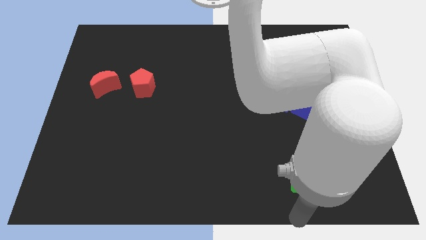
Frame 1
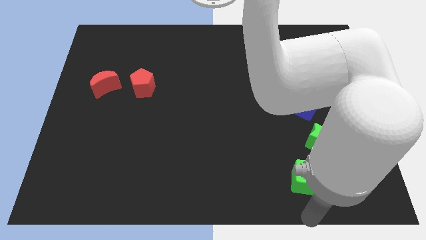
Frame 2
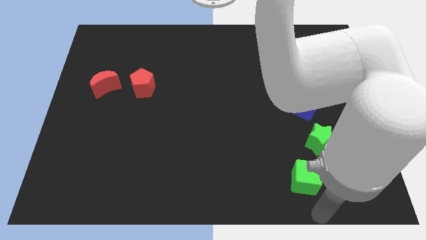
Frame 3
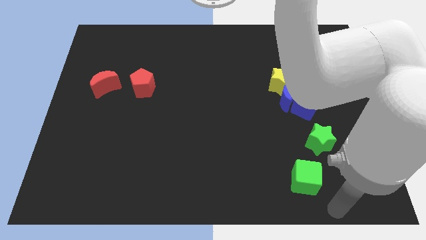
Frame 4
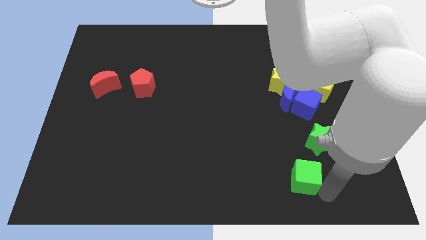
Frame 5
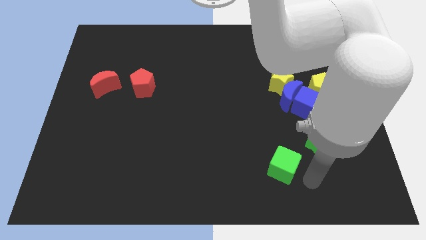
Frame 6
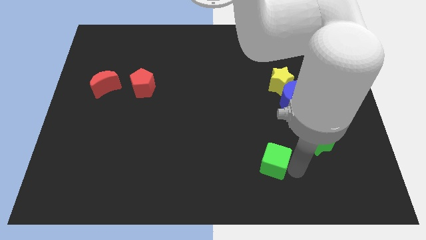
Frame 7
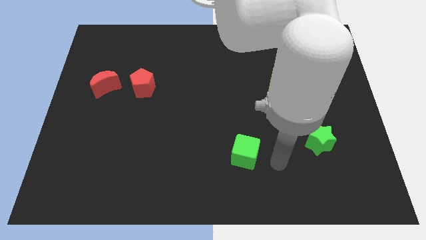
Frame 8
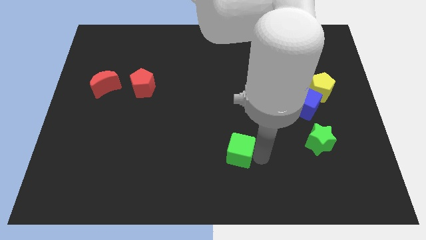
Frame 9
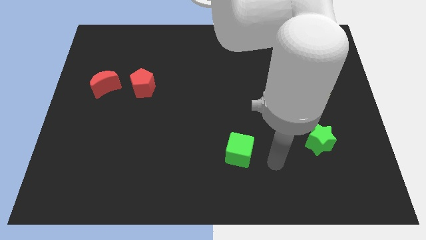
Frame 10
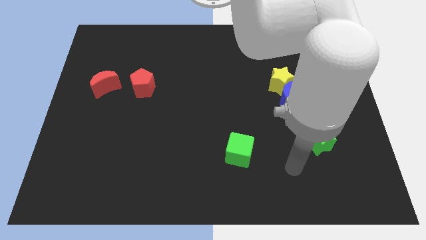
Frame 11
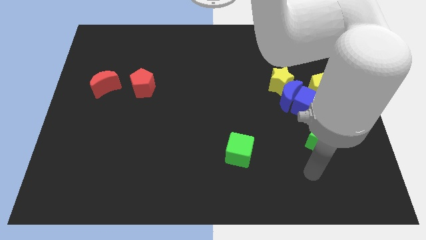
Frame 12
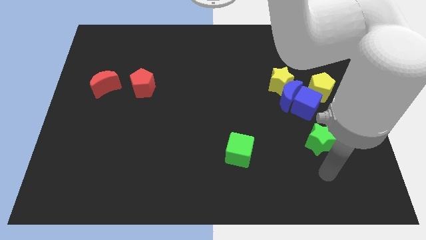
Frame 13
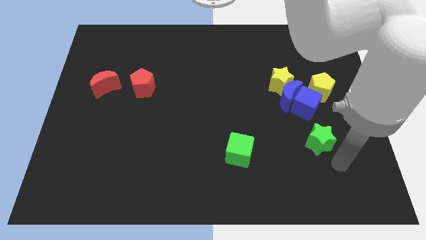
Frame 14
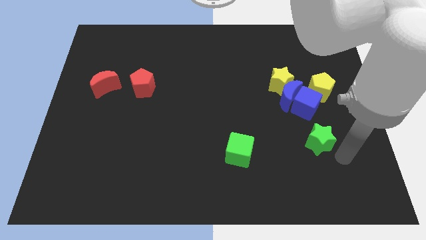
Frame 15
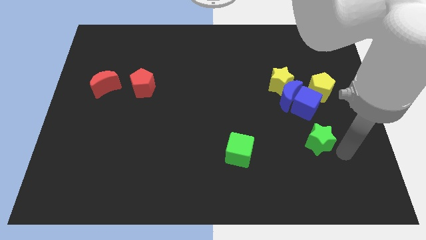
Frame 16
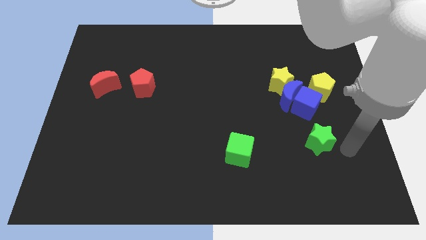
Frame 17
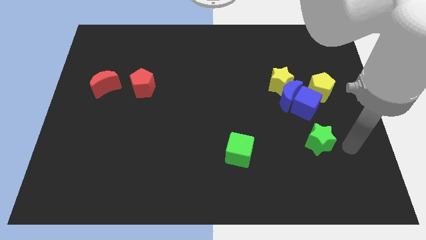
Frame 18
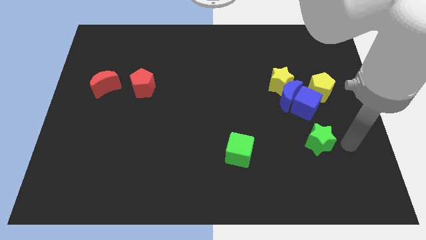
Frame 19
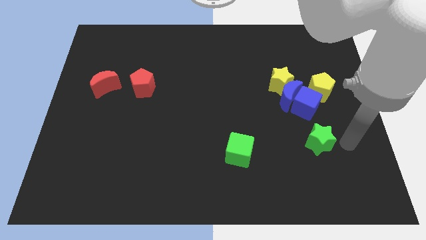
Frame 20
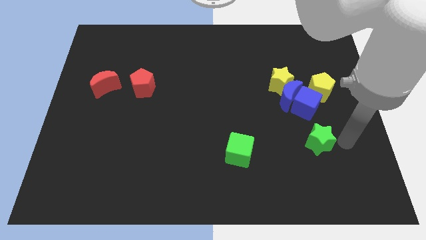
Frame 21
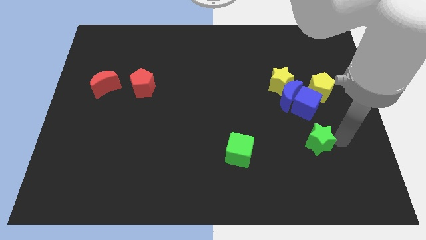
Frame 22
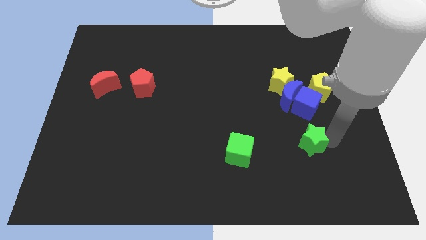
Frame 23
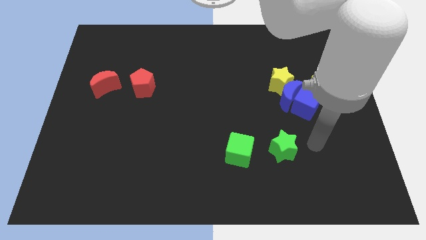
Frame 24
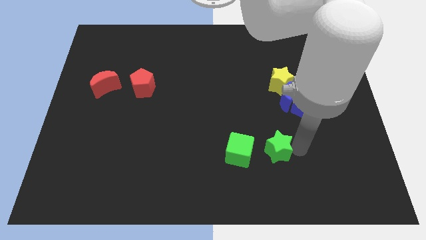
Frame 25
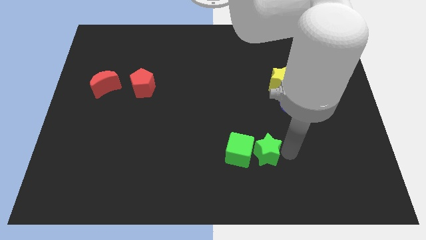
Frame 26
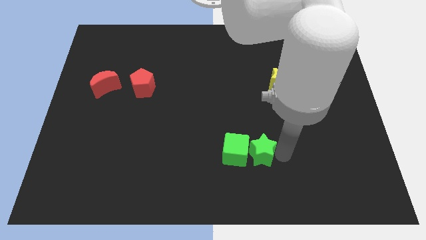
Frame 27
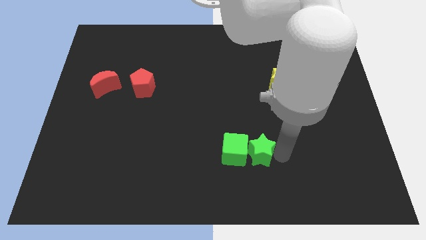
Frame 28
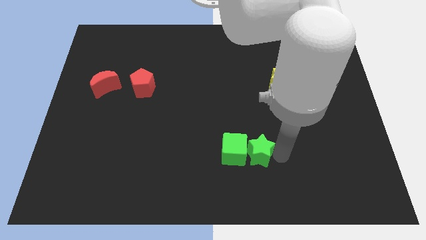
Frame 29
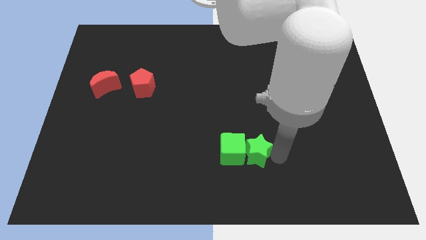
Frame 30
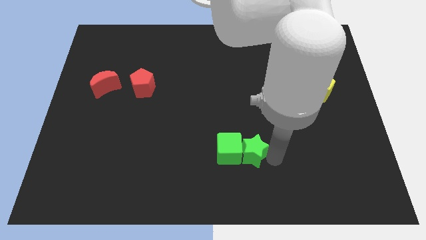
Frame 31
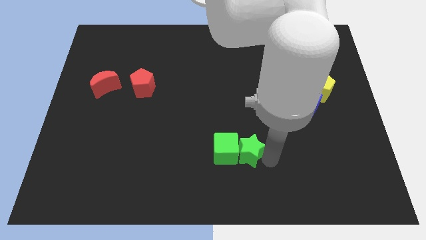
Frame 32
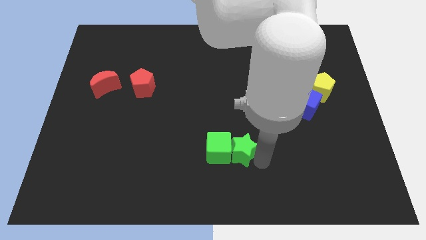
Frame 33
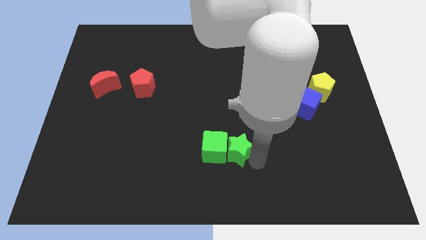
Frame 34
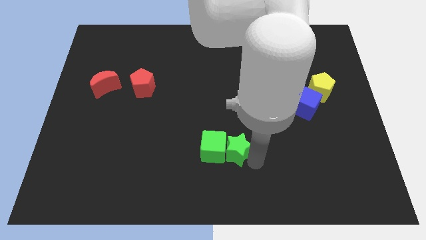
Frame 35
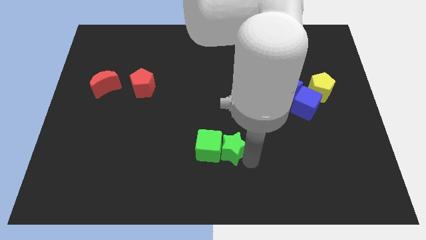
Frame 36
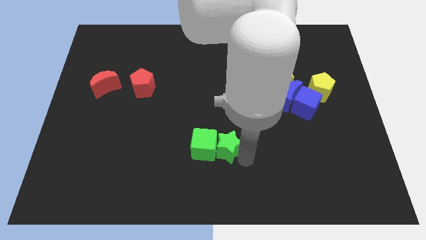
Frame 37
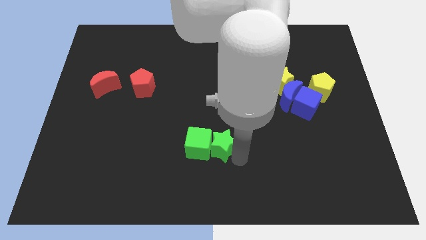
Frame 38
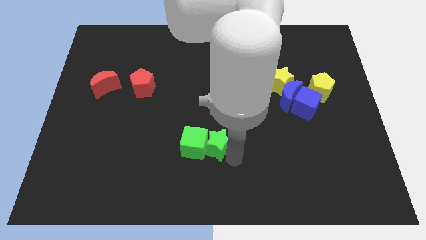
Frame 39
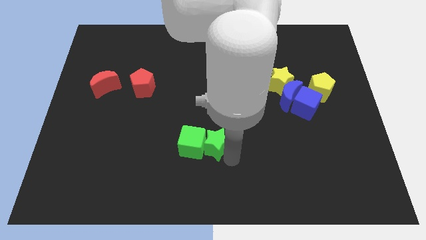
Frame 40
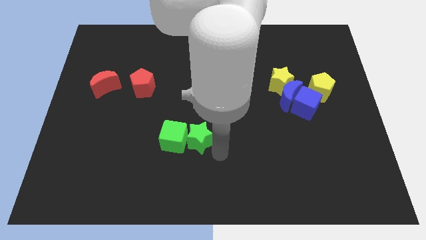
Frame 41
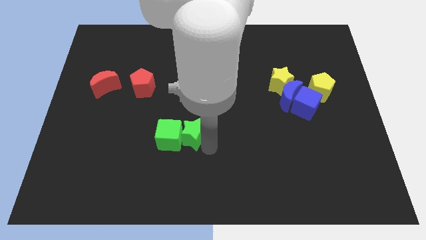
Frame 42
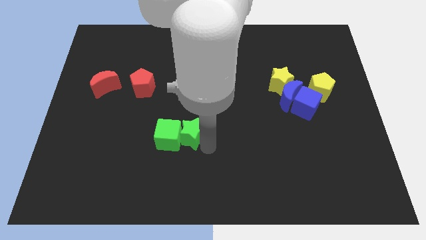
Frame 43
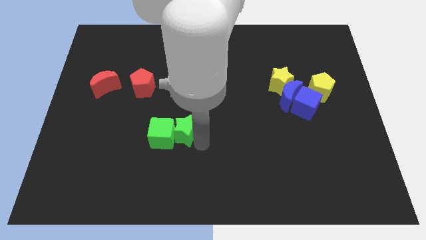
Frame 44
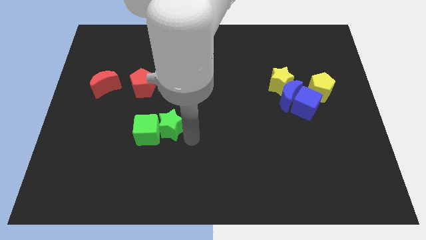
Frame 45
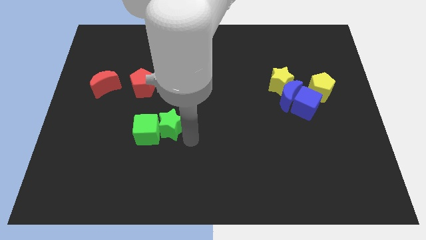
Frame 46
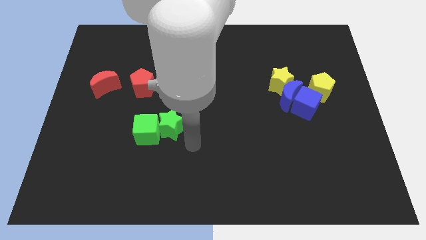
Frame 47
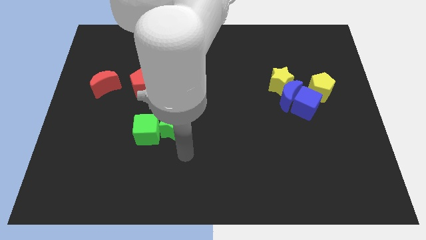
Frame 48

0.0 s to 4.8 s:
move the green blocks towrads the red blocks

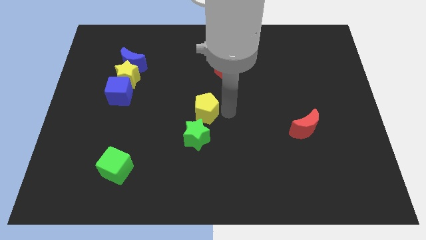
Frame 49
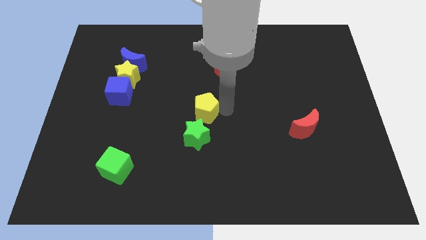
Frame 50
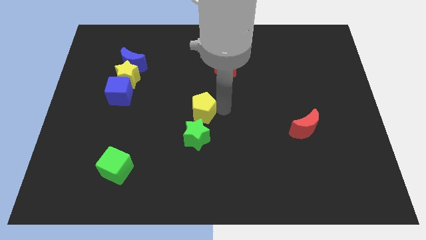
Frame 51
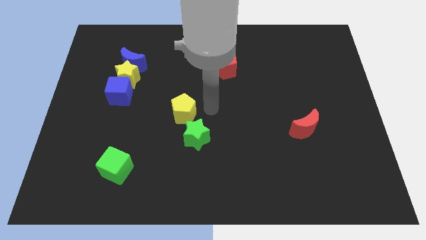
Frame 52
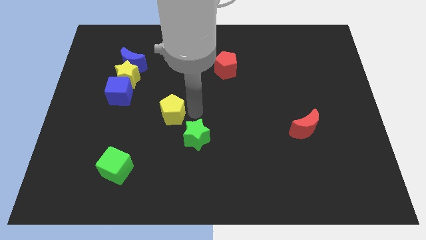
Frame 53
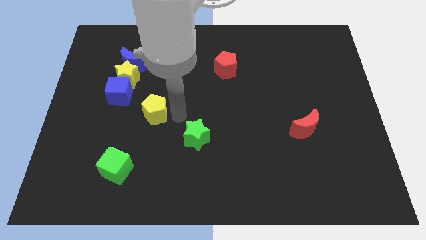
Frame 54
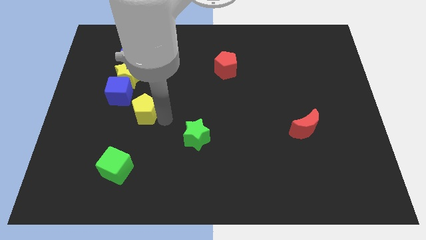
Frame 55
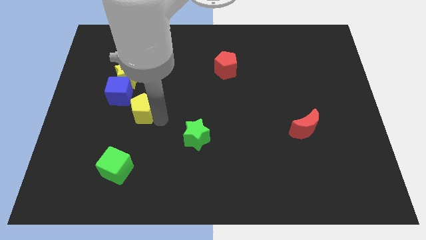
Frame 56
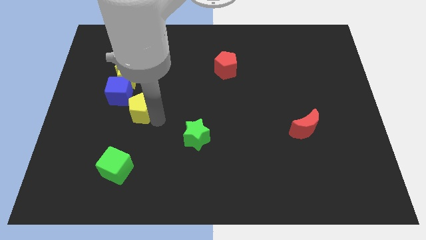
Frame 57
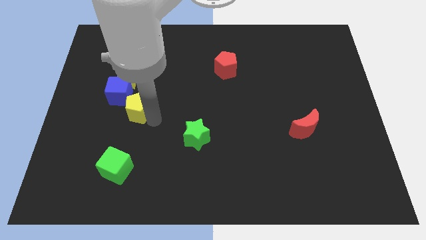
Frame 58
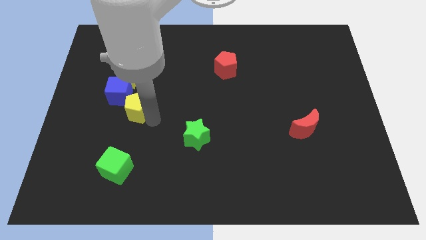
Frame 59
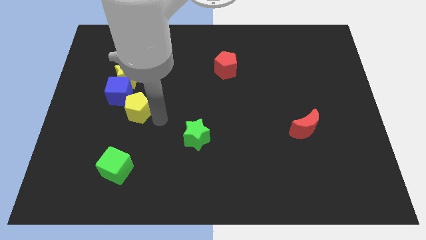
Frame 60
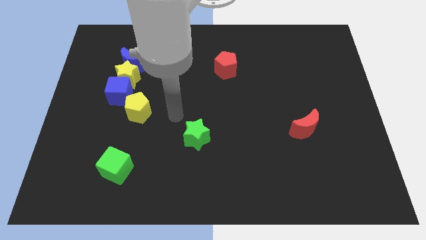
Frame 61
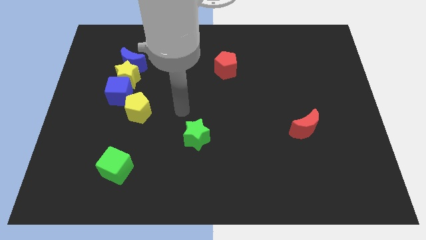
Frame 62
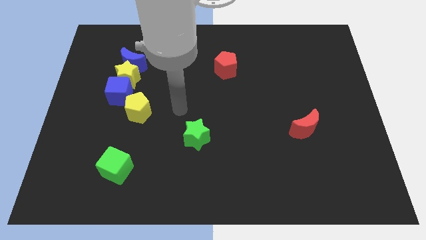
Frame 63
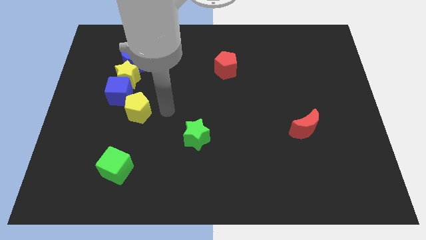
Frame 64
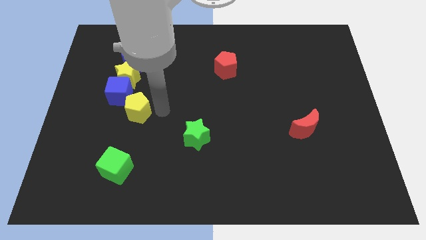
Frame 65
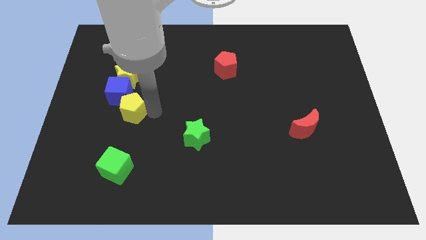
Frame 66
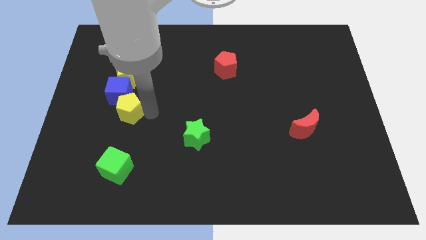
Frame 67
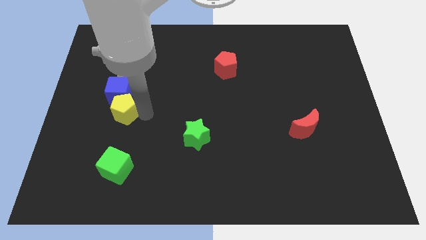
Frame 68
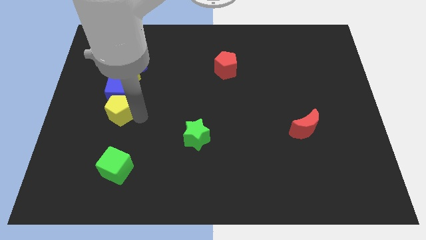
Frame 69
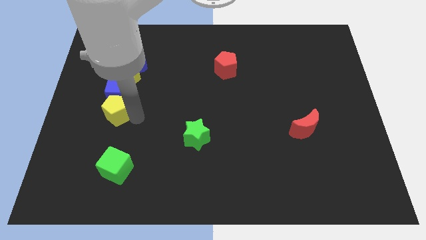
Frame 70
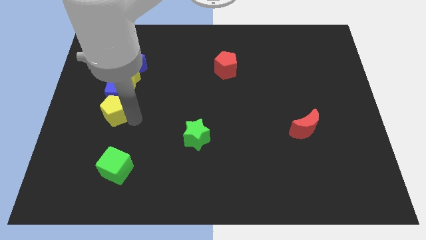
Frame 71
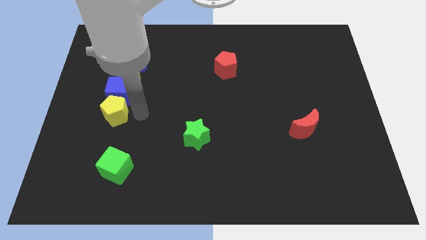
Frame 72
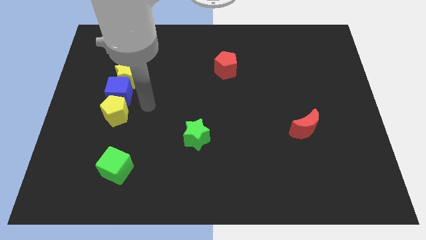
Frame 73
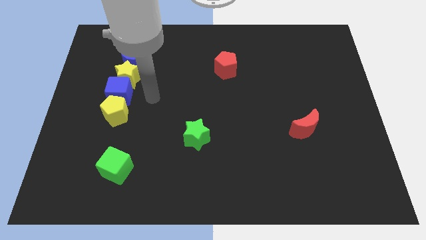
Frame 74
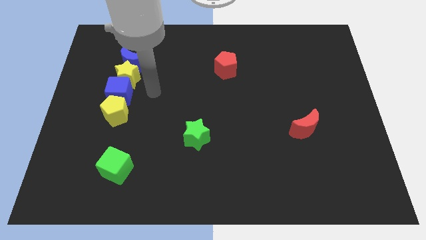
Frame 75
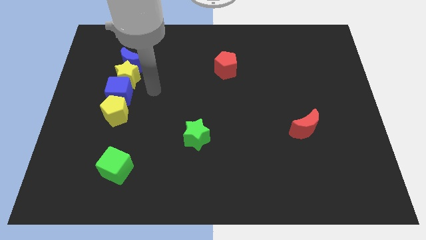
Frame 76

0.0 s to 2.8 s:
push the yellow pentagon to the bottom of the blue cube

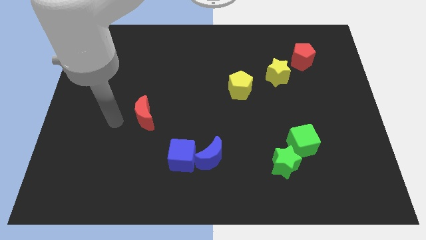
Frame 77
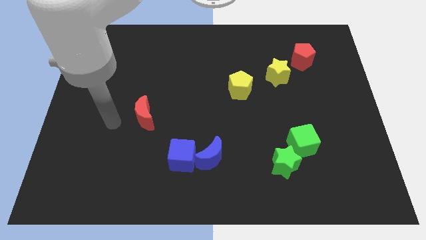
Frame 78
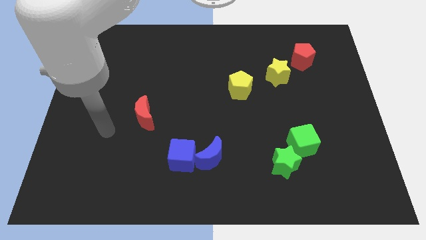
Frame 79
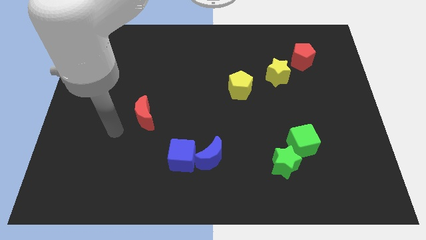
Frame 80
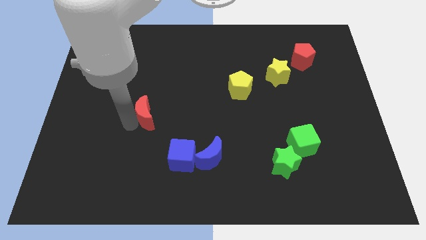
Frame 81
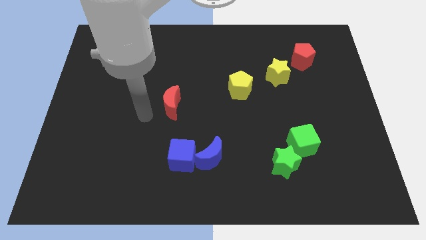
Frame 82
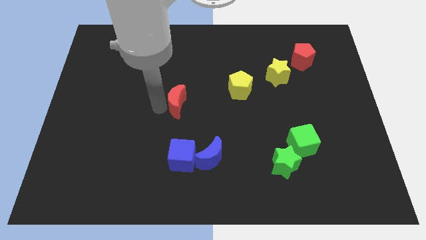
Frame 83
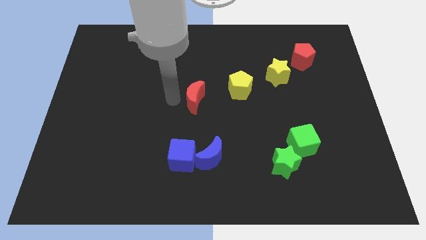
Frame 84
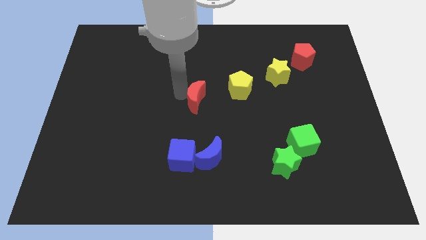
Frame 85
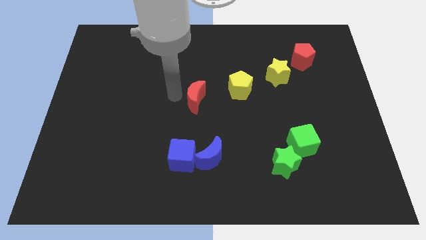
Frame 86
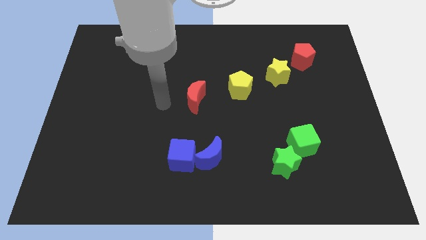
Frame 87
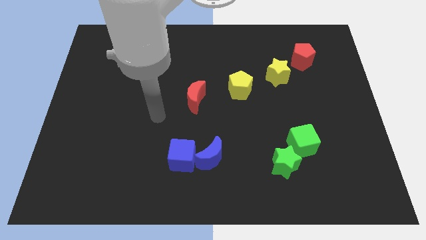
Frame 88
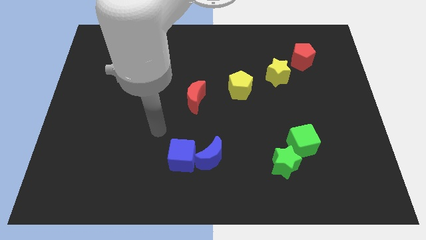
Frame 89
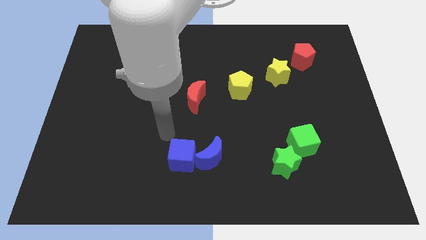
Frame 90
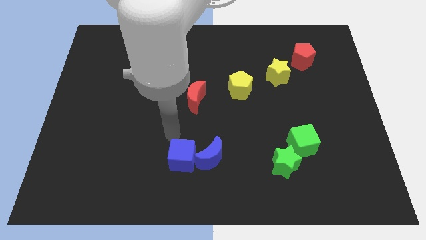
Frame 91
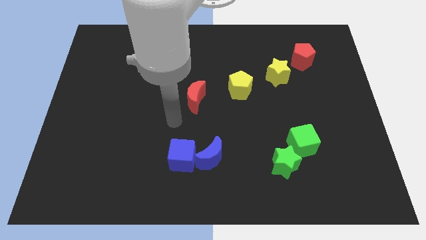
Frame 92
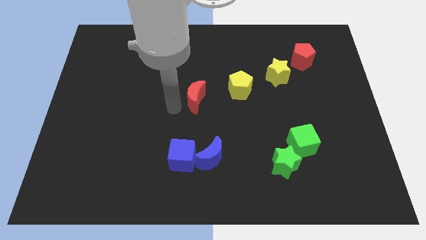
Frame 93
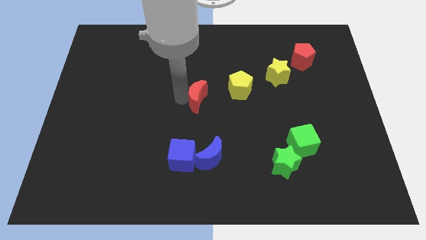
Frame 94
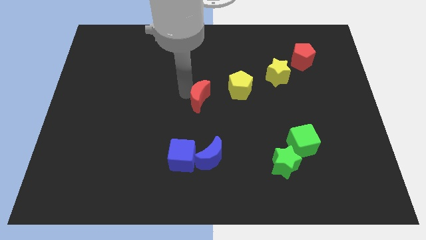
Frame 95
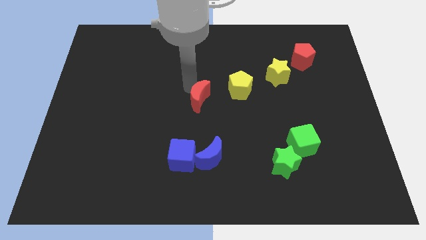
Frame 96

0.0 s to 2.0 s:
move the red moon to the middle of the board
